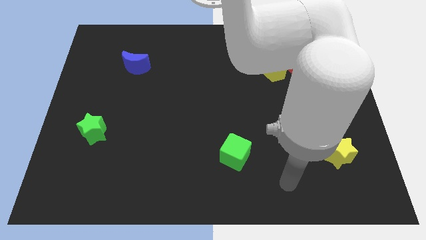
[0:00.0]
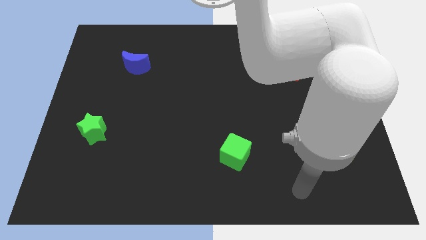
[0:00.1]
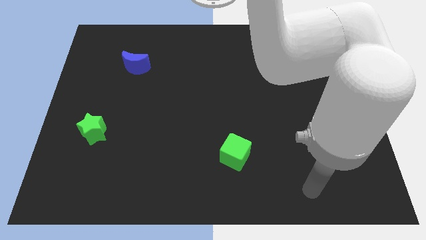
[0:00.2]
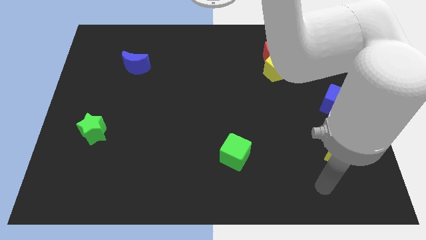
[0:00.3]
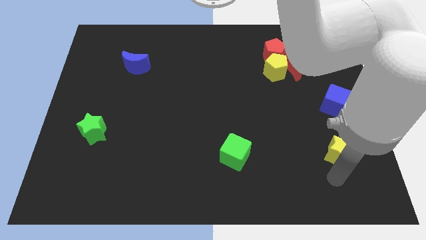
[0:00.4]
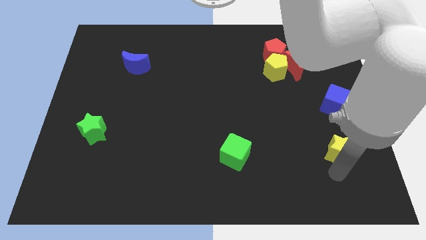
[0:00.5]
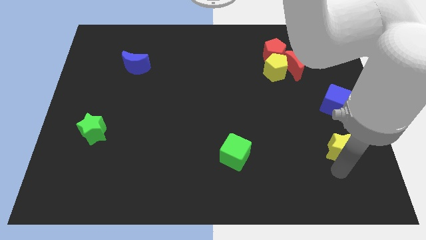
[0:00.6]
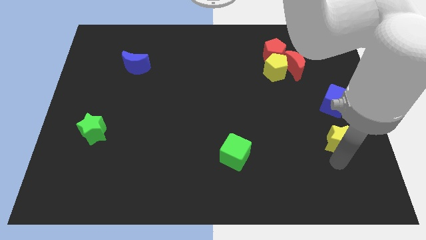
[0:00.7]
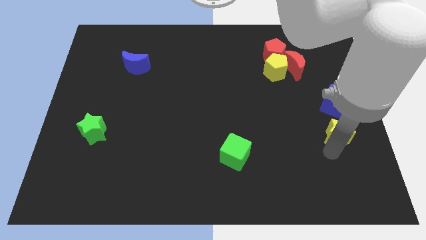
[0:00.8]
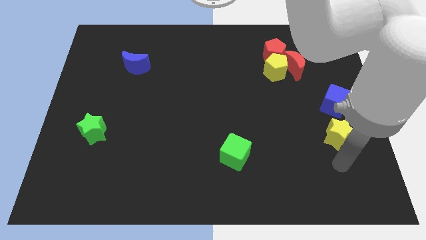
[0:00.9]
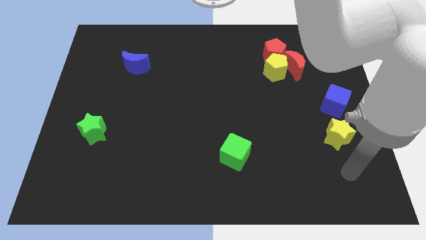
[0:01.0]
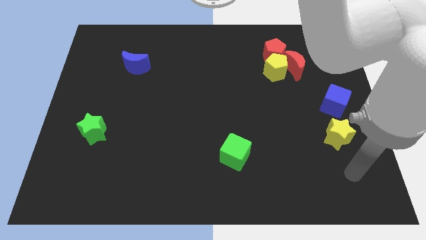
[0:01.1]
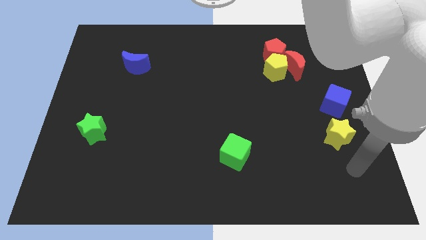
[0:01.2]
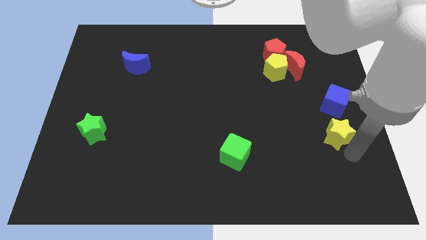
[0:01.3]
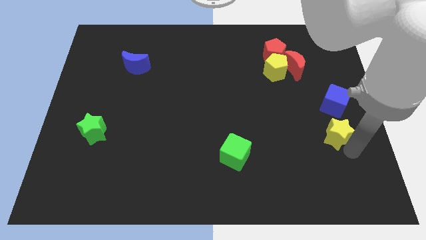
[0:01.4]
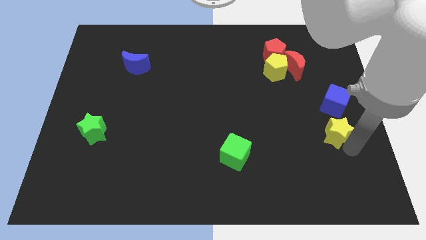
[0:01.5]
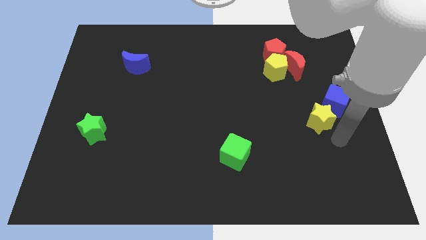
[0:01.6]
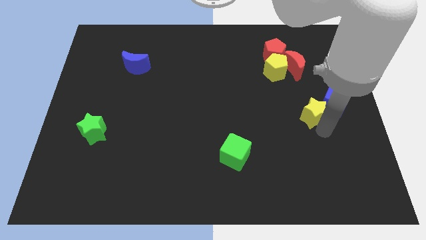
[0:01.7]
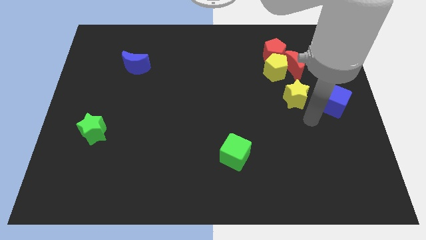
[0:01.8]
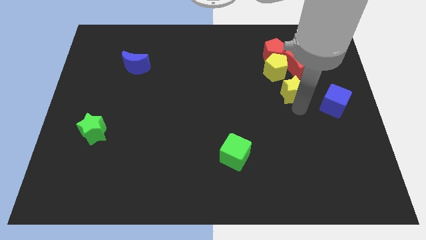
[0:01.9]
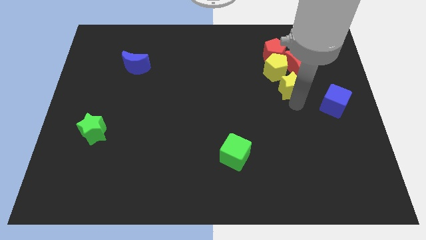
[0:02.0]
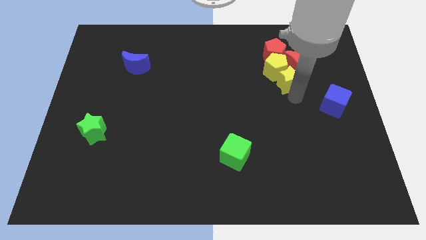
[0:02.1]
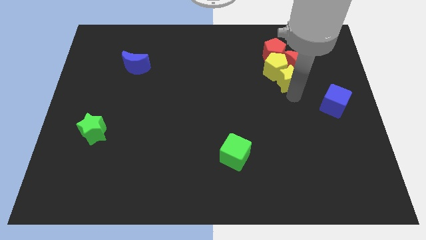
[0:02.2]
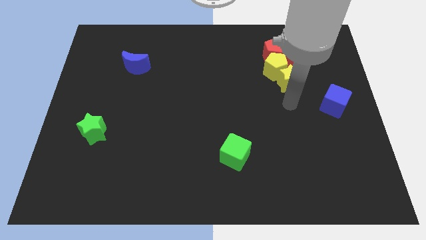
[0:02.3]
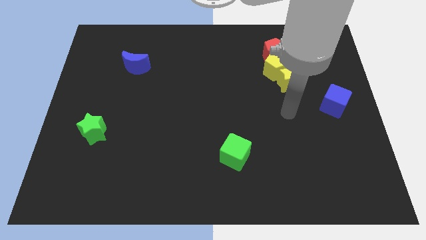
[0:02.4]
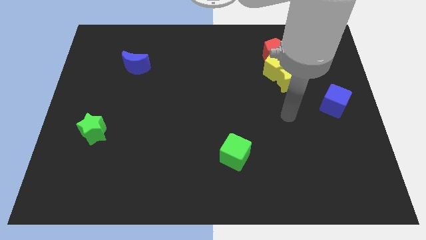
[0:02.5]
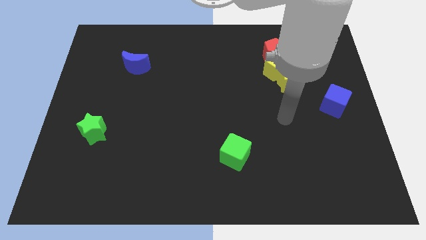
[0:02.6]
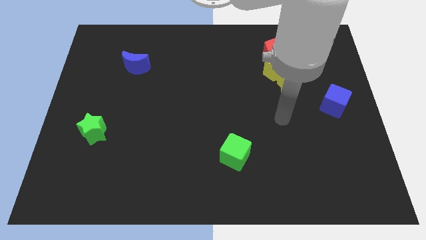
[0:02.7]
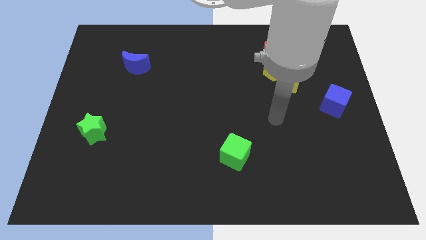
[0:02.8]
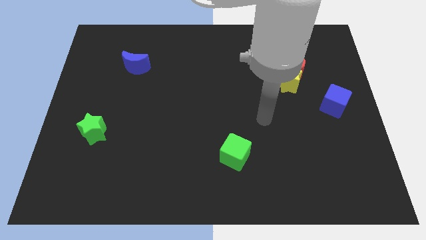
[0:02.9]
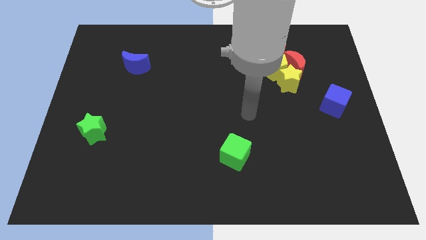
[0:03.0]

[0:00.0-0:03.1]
push the yellow star towards the group of blocks

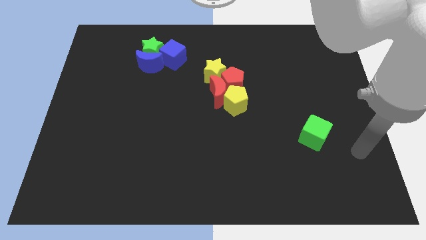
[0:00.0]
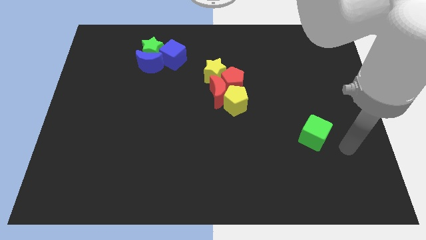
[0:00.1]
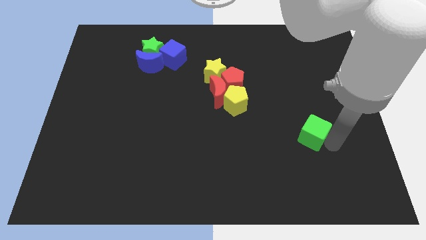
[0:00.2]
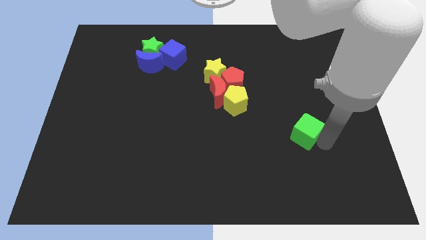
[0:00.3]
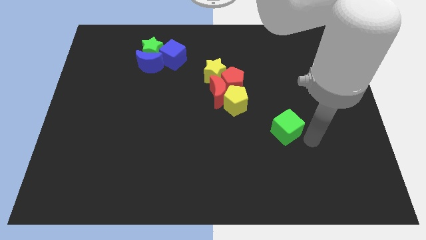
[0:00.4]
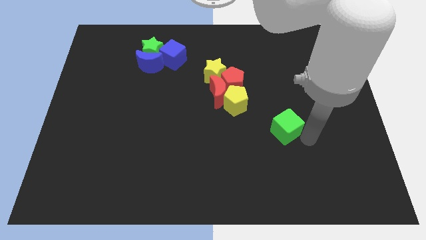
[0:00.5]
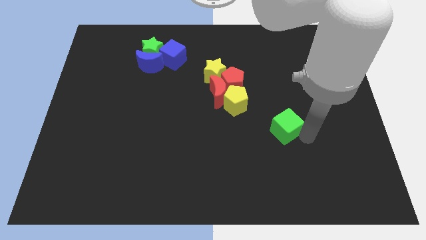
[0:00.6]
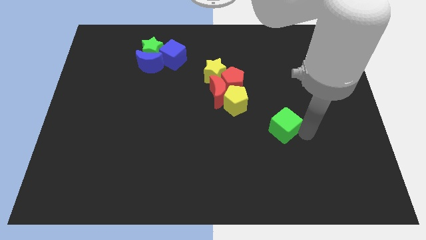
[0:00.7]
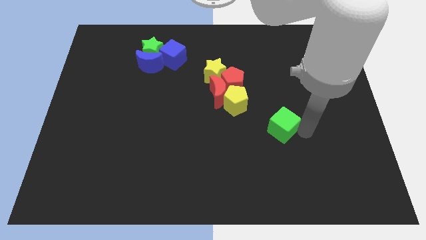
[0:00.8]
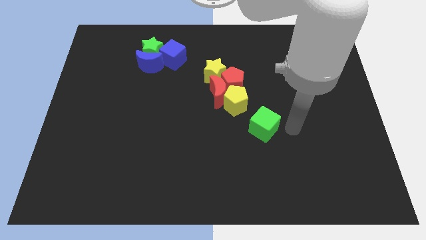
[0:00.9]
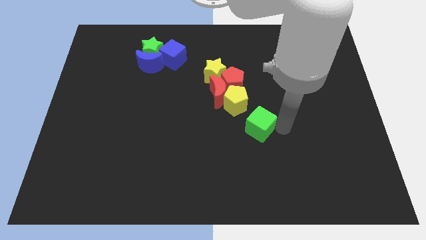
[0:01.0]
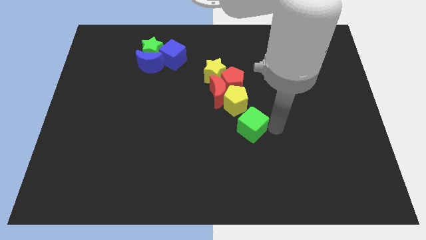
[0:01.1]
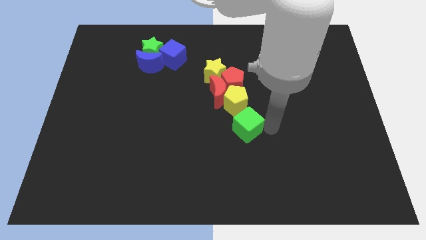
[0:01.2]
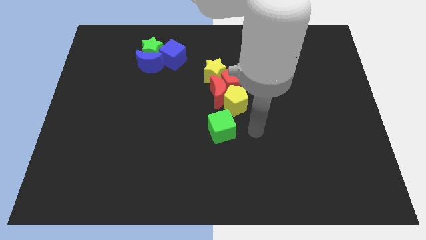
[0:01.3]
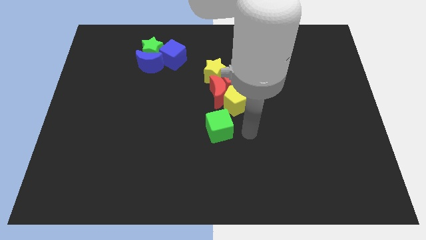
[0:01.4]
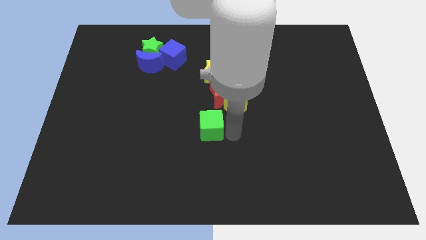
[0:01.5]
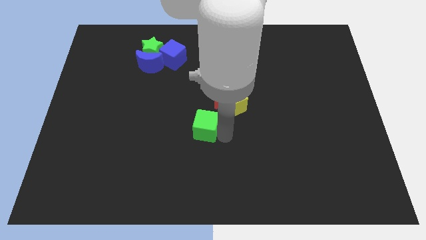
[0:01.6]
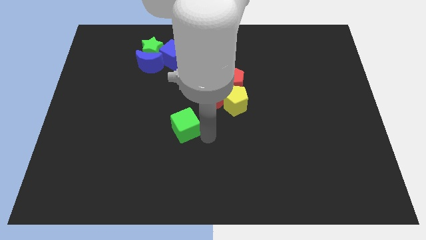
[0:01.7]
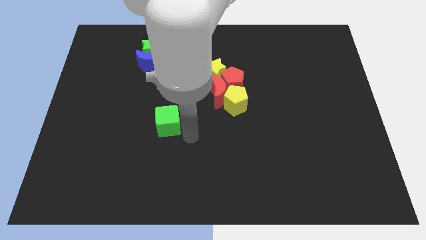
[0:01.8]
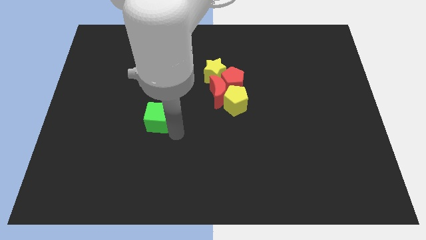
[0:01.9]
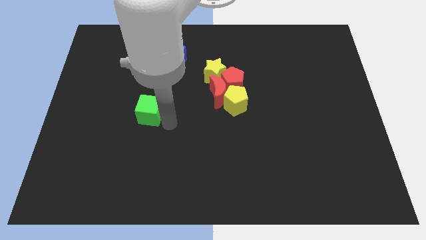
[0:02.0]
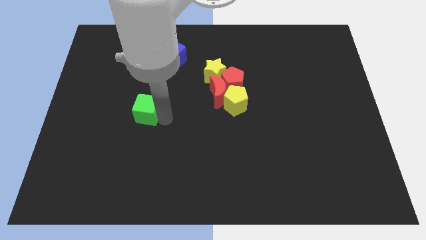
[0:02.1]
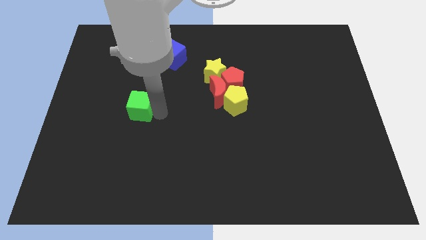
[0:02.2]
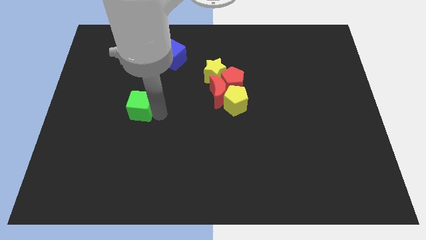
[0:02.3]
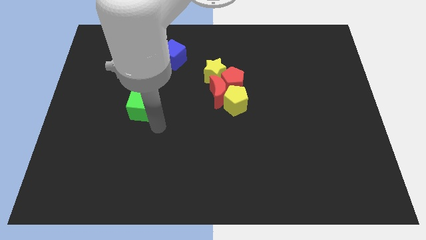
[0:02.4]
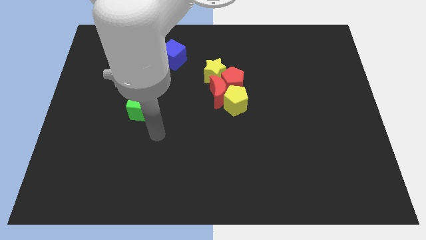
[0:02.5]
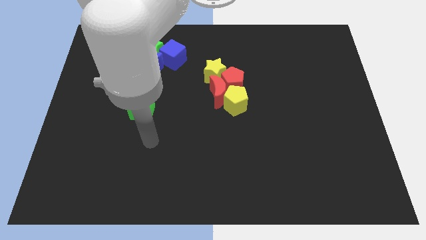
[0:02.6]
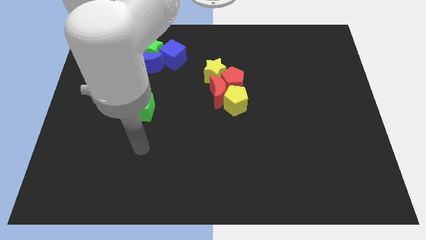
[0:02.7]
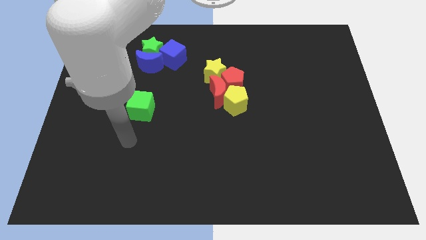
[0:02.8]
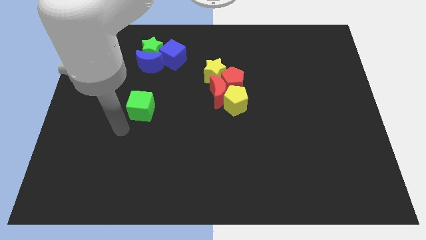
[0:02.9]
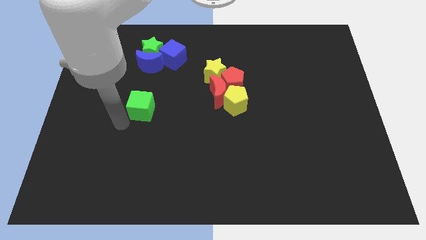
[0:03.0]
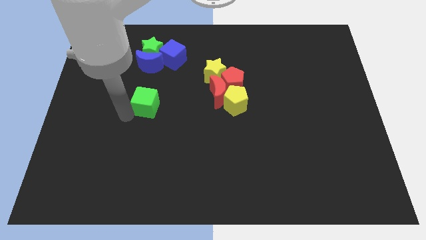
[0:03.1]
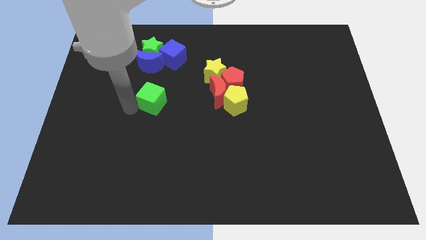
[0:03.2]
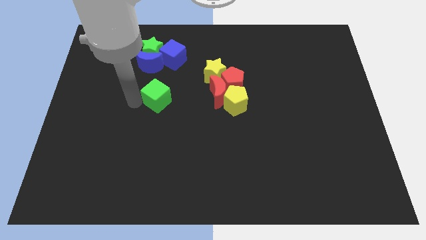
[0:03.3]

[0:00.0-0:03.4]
push the green cube below the blue moon

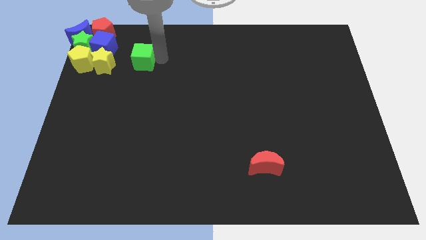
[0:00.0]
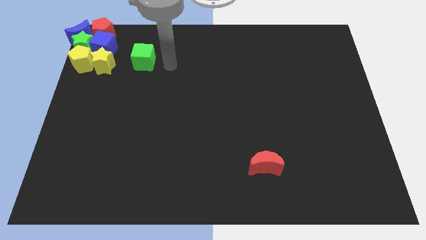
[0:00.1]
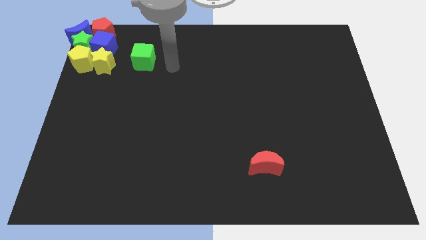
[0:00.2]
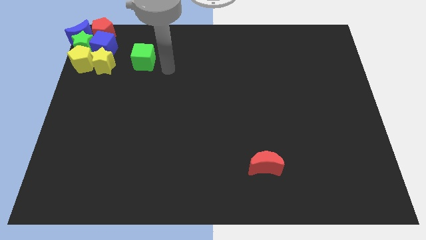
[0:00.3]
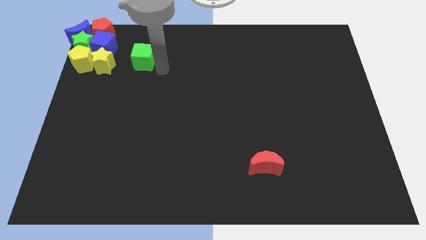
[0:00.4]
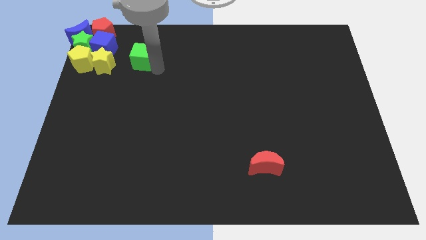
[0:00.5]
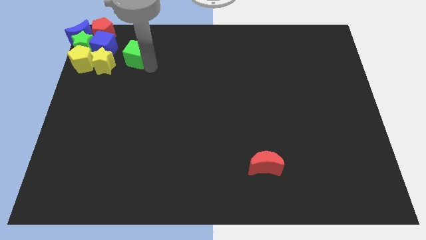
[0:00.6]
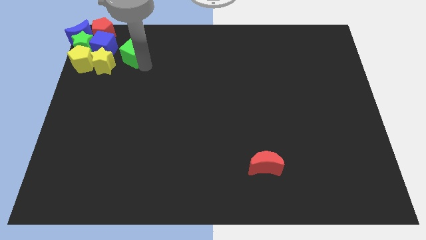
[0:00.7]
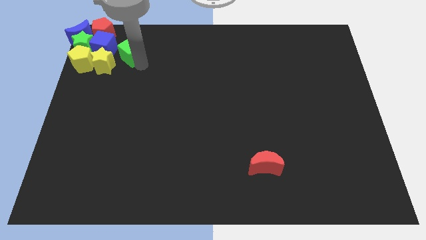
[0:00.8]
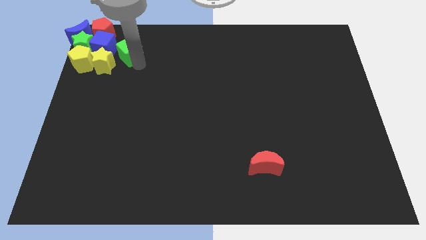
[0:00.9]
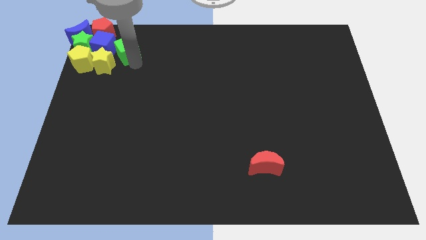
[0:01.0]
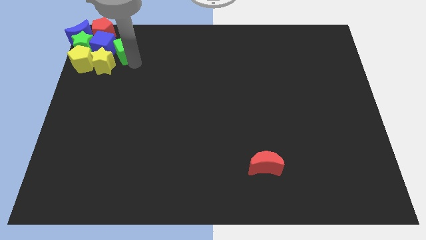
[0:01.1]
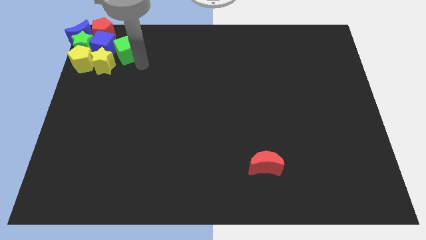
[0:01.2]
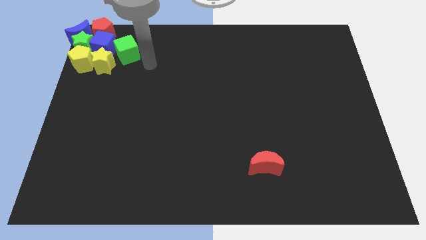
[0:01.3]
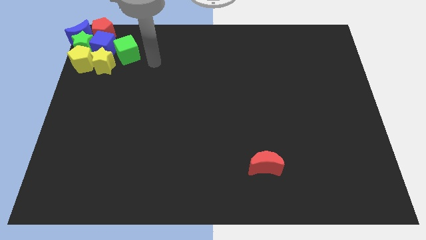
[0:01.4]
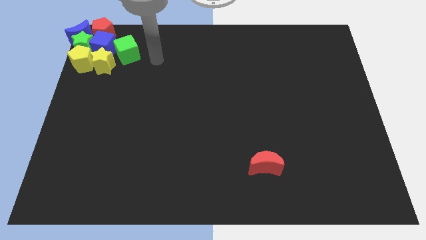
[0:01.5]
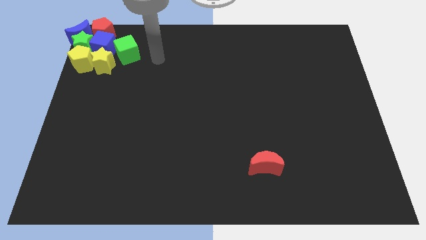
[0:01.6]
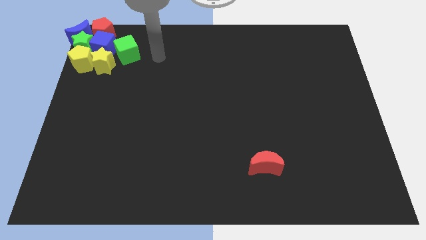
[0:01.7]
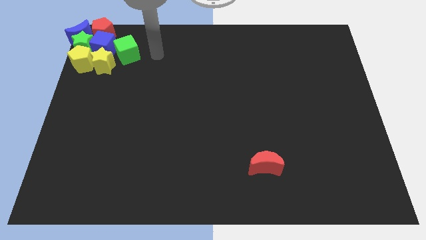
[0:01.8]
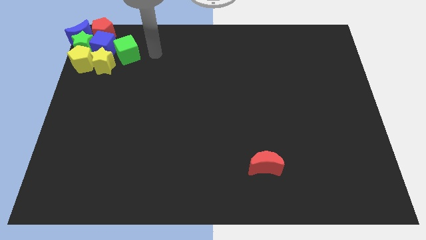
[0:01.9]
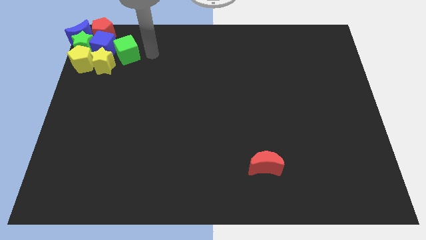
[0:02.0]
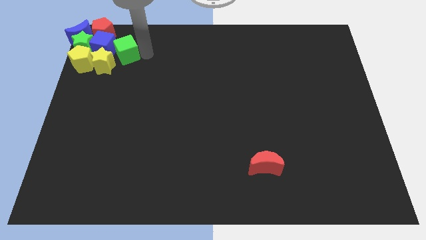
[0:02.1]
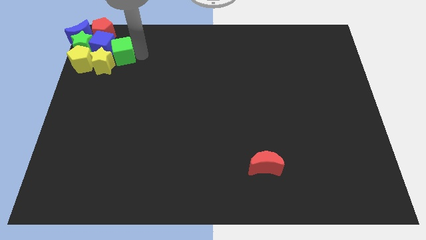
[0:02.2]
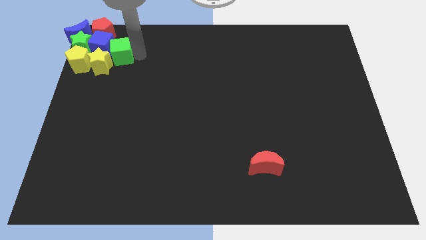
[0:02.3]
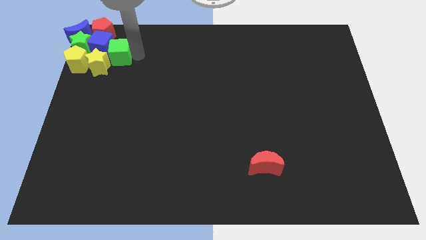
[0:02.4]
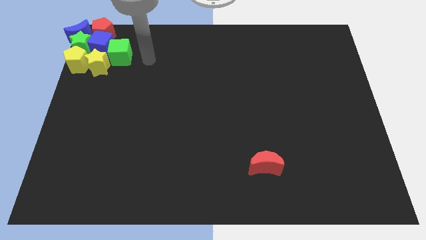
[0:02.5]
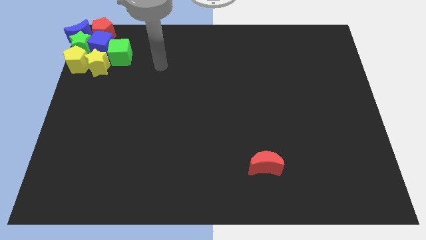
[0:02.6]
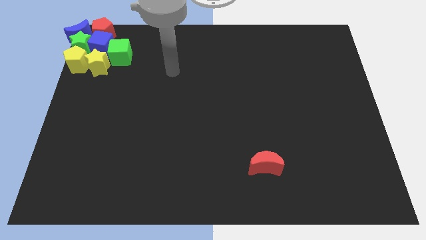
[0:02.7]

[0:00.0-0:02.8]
move the green cube to the right side of the blue cube
